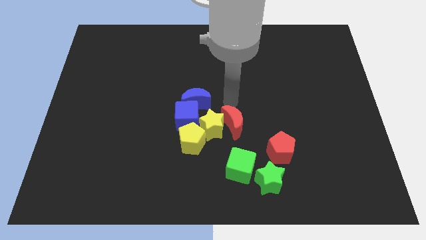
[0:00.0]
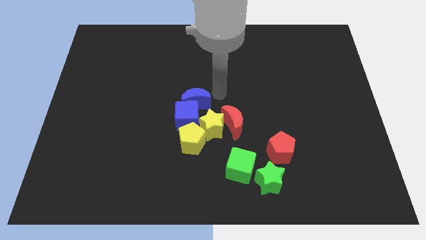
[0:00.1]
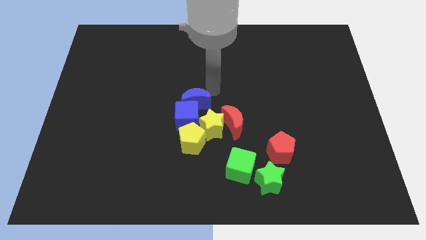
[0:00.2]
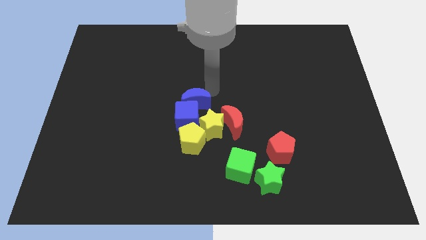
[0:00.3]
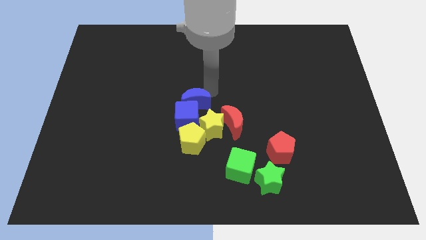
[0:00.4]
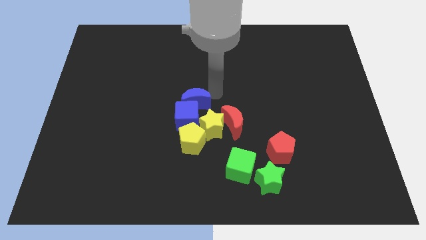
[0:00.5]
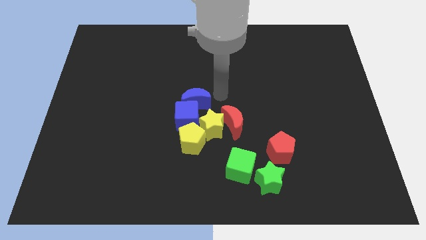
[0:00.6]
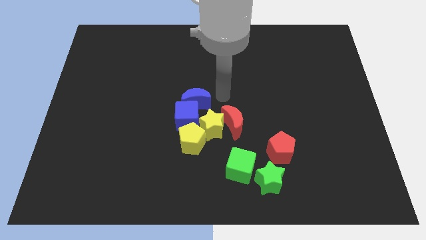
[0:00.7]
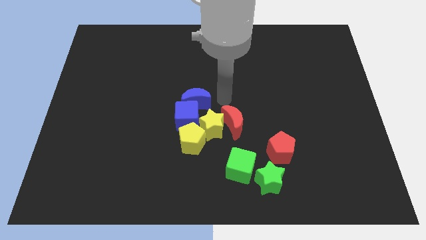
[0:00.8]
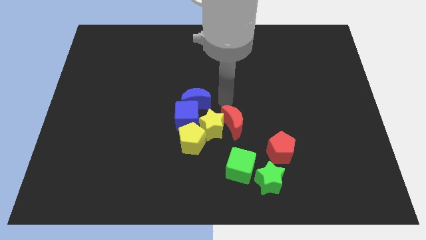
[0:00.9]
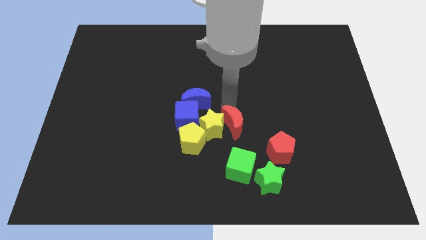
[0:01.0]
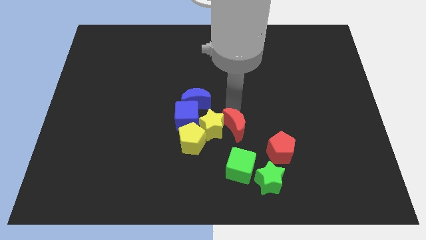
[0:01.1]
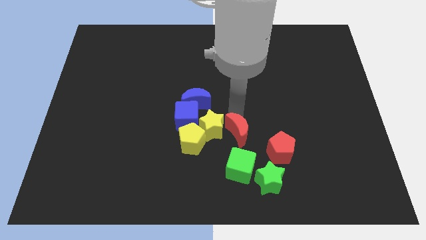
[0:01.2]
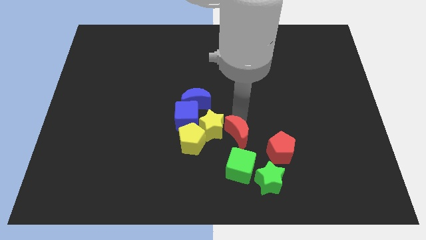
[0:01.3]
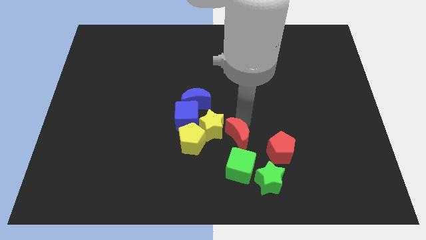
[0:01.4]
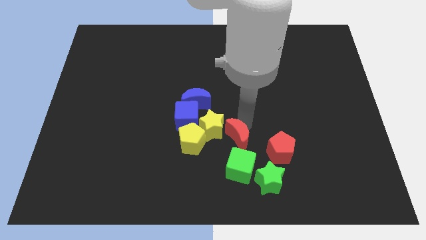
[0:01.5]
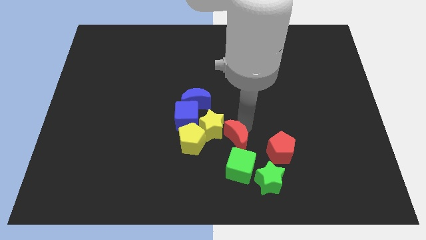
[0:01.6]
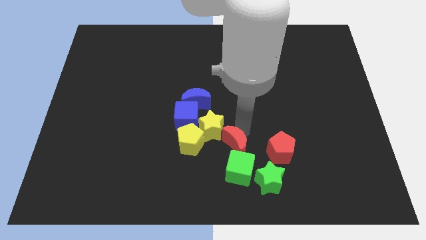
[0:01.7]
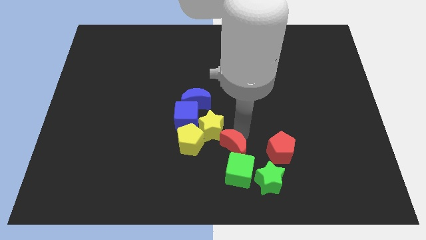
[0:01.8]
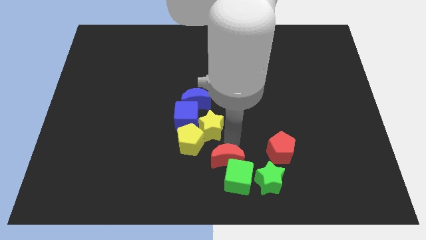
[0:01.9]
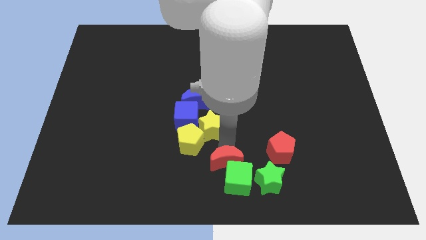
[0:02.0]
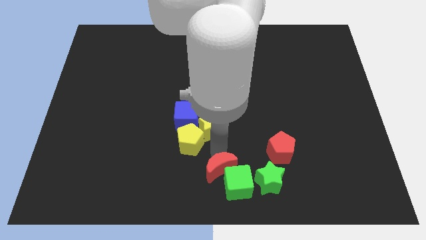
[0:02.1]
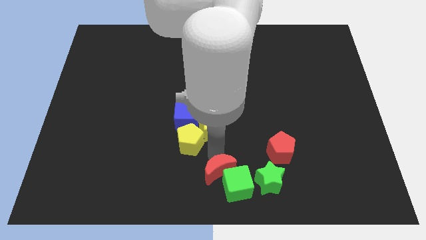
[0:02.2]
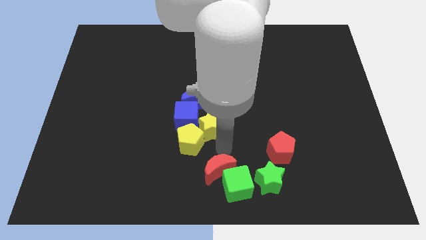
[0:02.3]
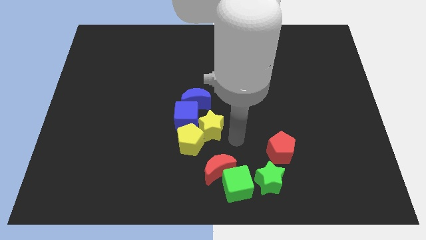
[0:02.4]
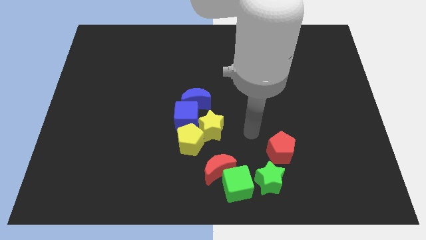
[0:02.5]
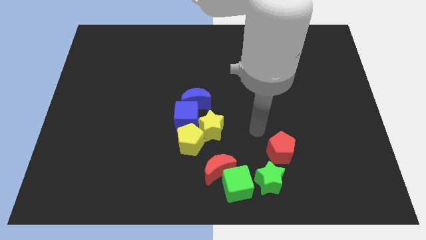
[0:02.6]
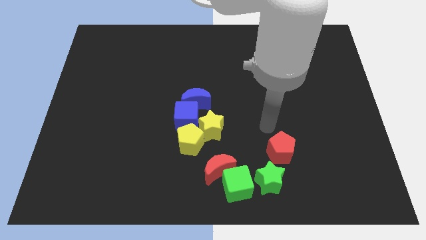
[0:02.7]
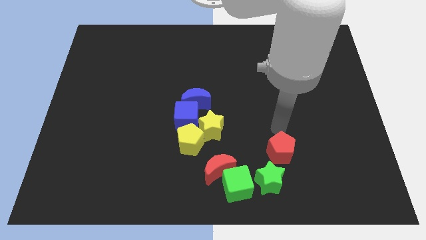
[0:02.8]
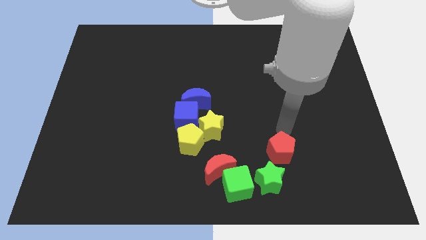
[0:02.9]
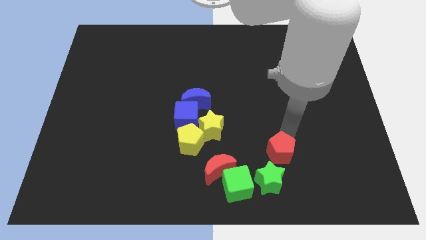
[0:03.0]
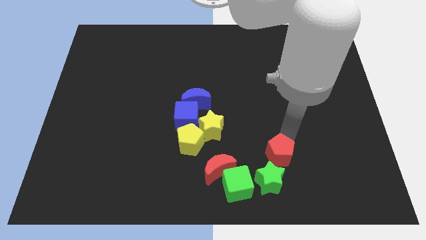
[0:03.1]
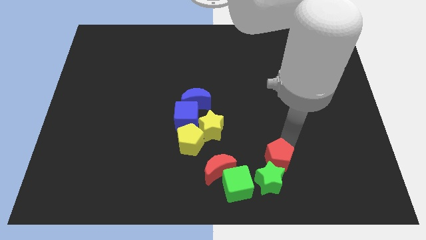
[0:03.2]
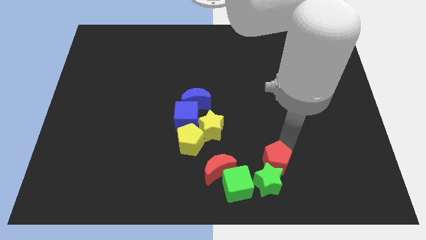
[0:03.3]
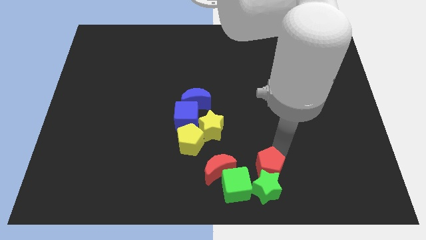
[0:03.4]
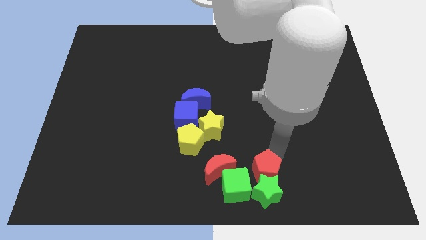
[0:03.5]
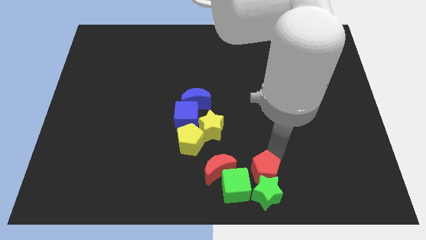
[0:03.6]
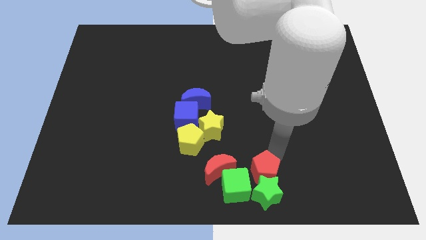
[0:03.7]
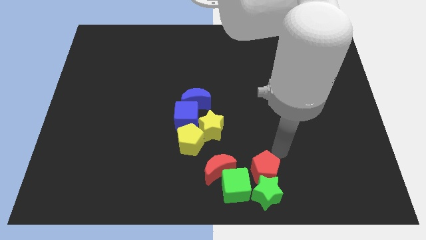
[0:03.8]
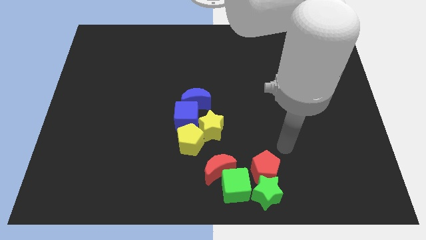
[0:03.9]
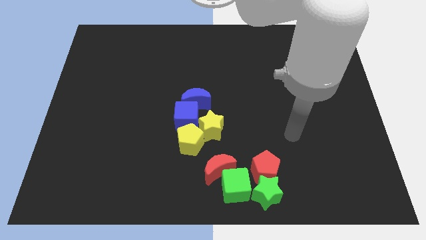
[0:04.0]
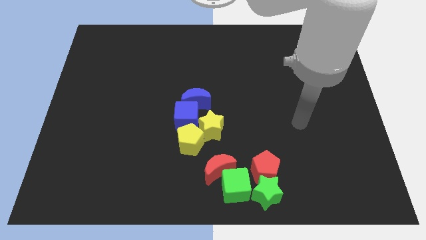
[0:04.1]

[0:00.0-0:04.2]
move the red moon and green cube towards the bottom center

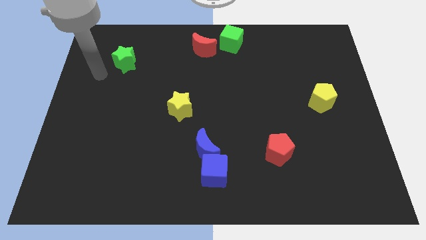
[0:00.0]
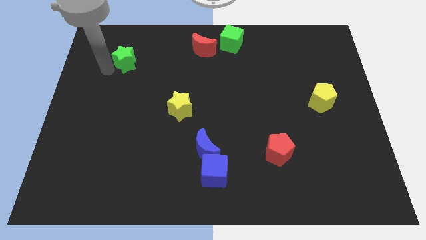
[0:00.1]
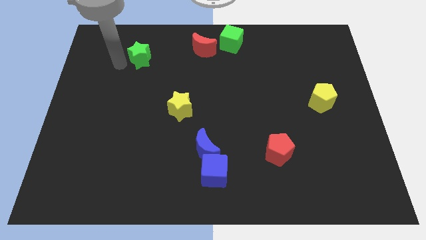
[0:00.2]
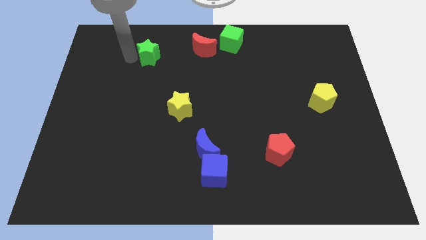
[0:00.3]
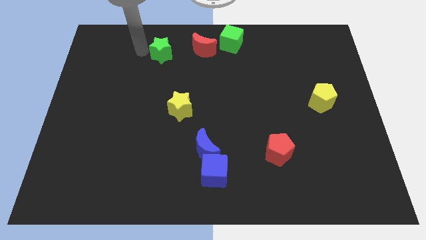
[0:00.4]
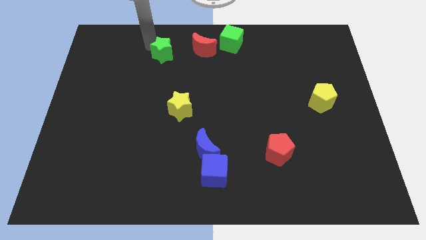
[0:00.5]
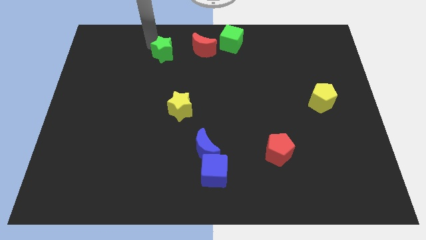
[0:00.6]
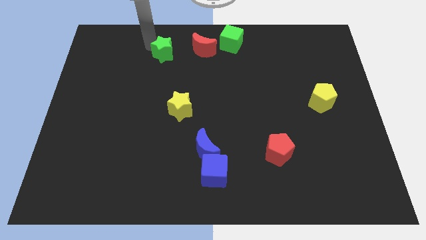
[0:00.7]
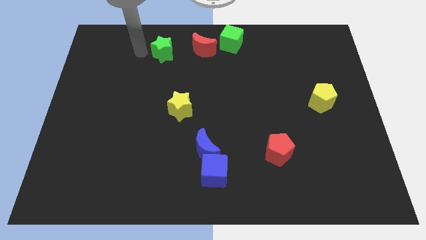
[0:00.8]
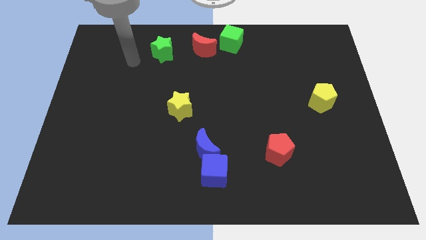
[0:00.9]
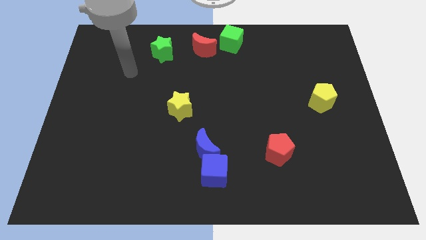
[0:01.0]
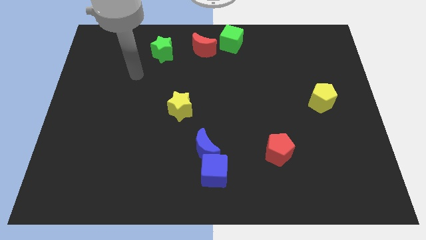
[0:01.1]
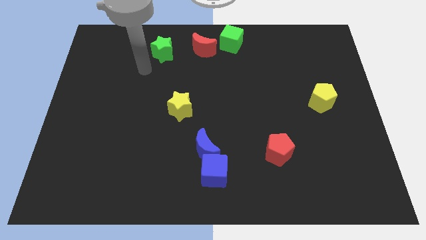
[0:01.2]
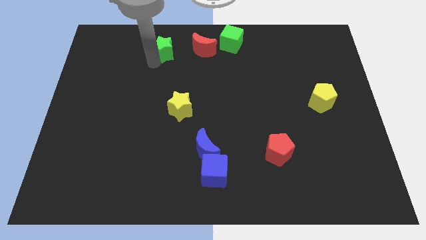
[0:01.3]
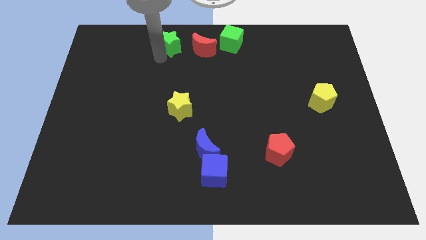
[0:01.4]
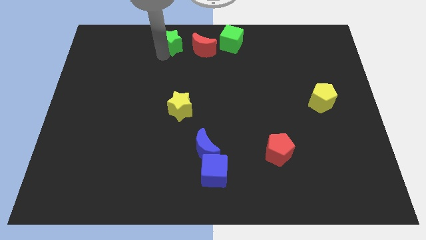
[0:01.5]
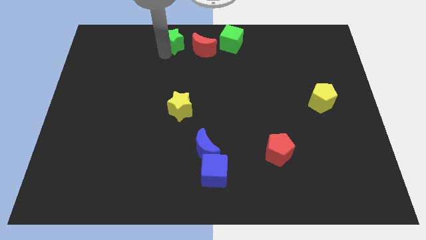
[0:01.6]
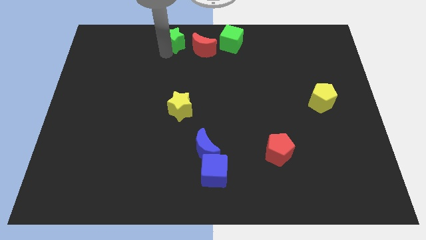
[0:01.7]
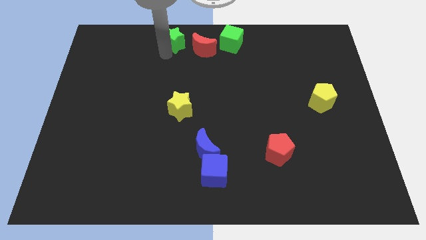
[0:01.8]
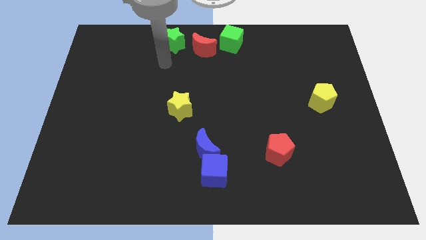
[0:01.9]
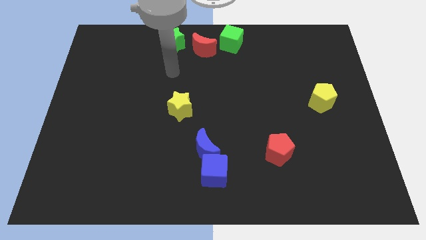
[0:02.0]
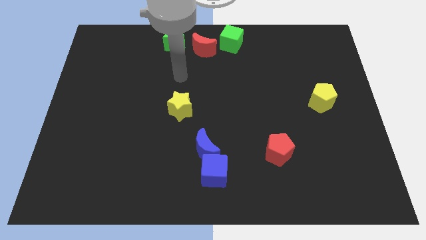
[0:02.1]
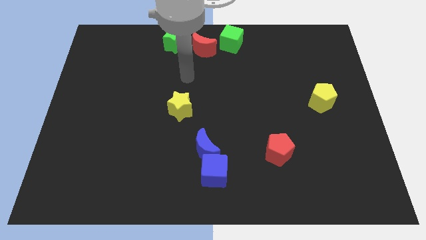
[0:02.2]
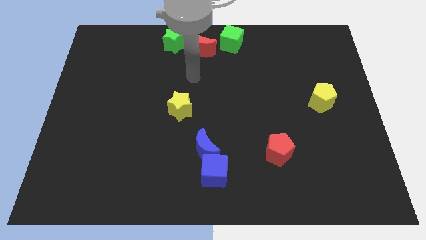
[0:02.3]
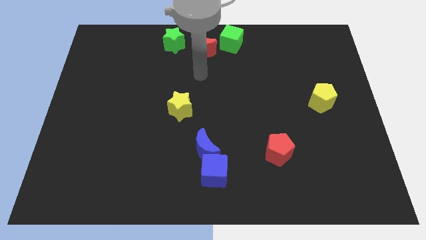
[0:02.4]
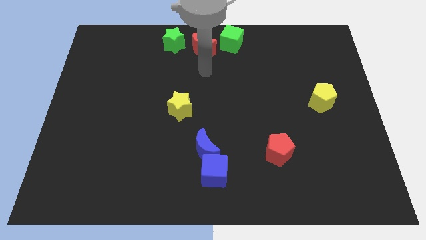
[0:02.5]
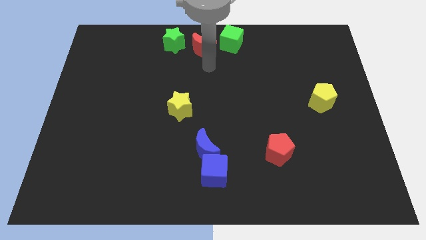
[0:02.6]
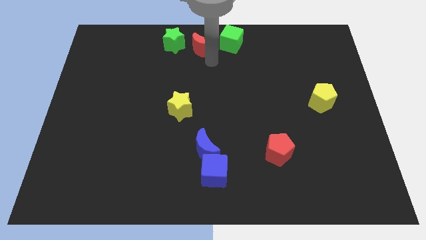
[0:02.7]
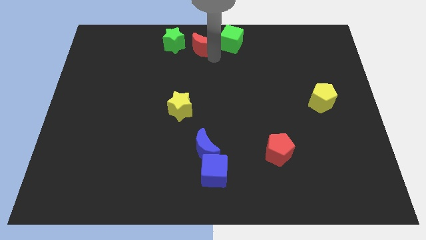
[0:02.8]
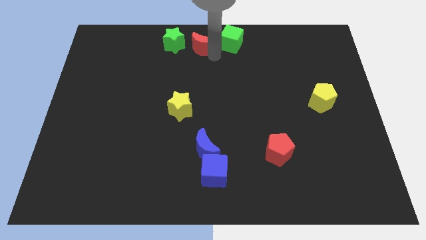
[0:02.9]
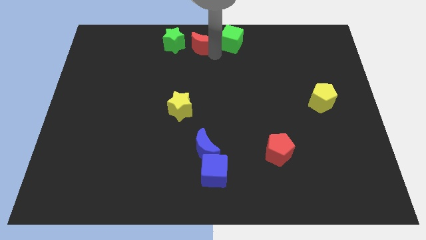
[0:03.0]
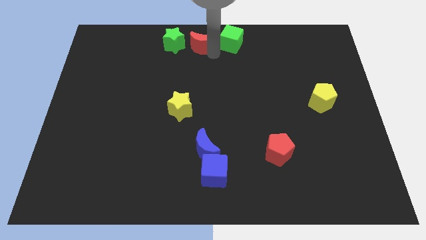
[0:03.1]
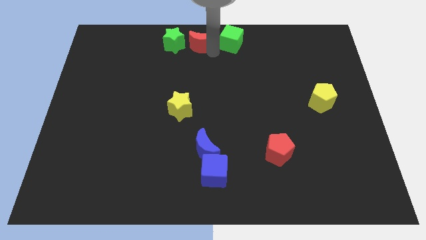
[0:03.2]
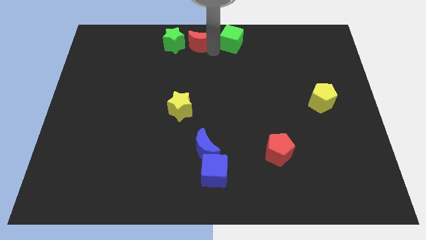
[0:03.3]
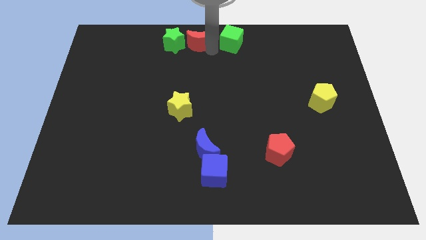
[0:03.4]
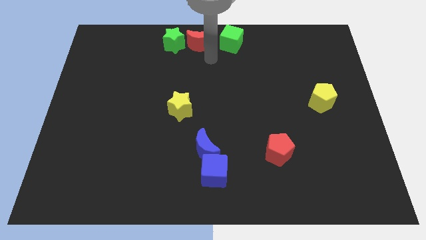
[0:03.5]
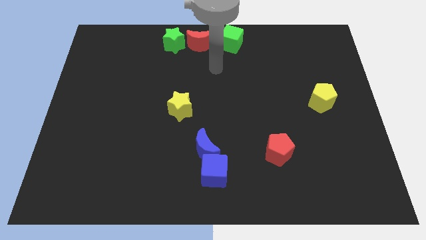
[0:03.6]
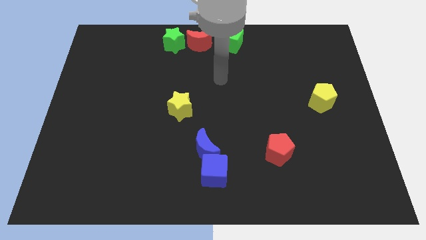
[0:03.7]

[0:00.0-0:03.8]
move the red moon between the green star and the green cube

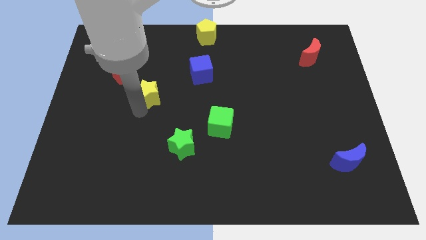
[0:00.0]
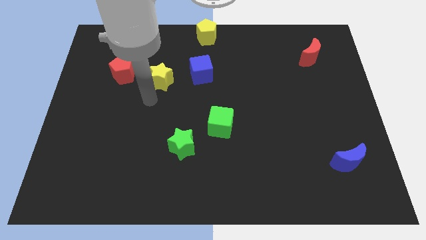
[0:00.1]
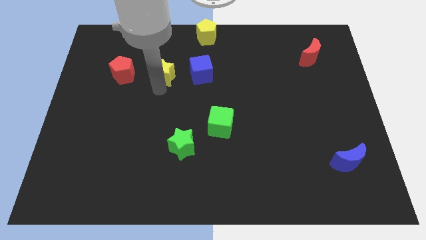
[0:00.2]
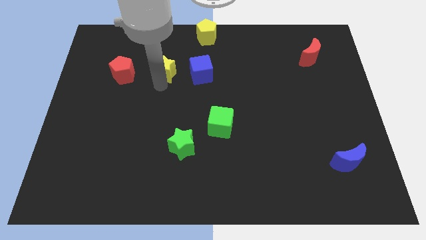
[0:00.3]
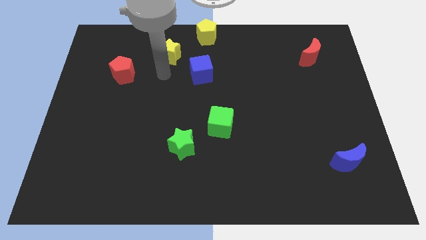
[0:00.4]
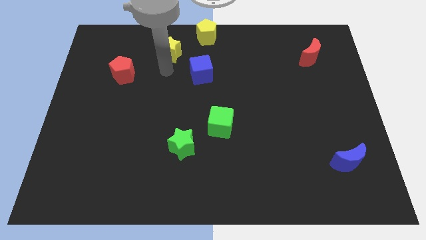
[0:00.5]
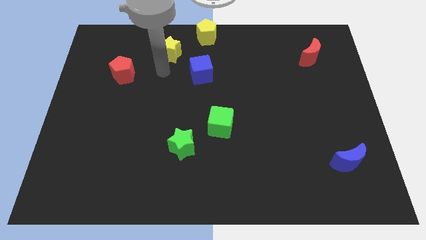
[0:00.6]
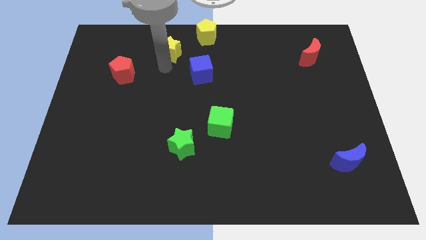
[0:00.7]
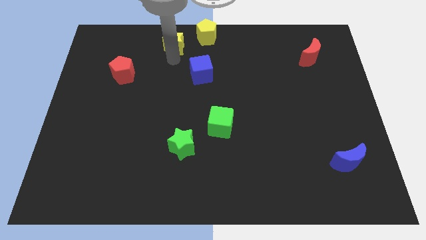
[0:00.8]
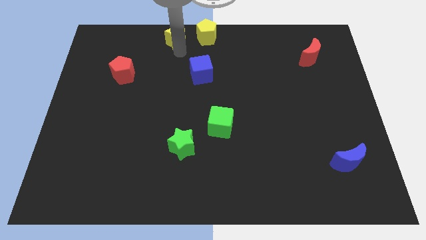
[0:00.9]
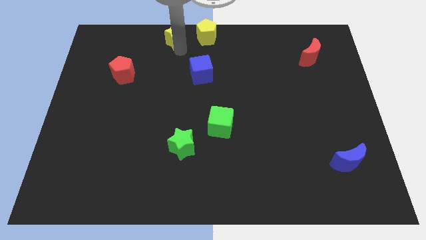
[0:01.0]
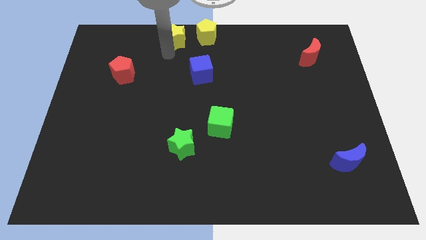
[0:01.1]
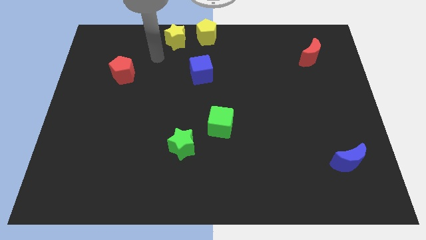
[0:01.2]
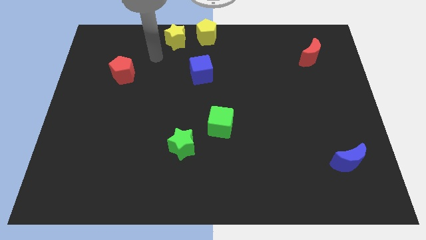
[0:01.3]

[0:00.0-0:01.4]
push yellow star to the left of the yellow pentagon
